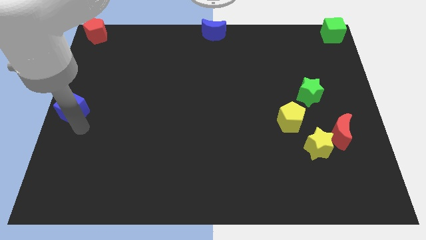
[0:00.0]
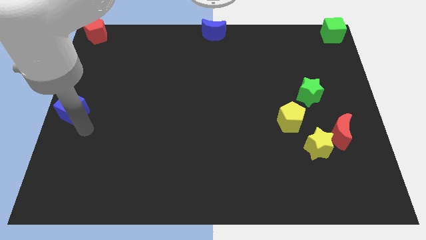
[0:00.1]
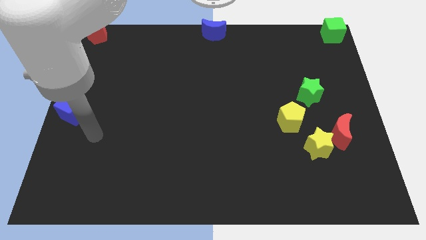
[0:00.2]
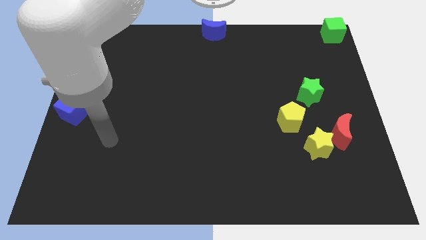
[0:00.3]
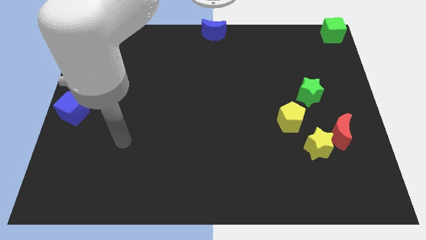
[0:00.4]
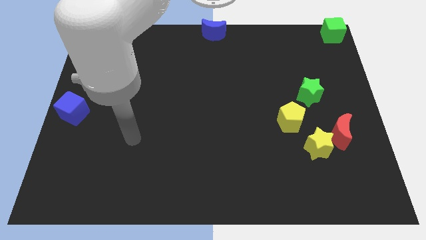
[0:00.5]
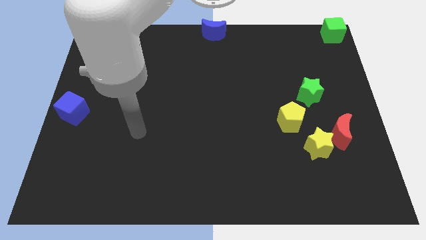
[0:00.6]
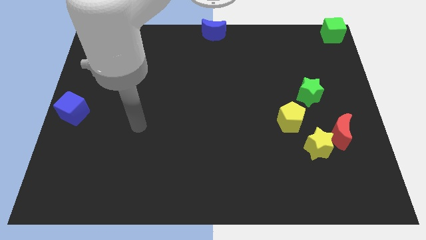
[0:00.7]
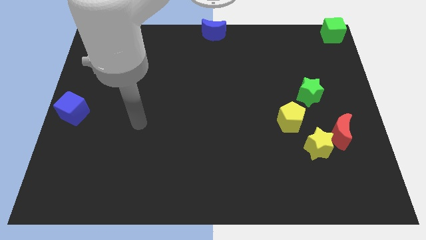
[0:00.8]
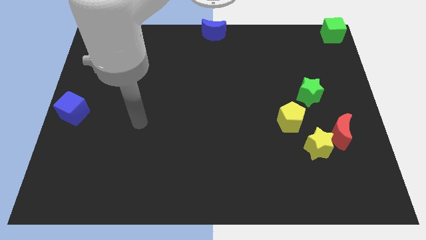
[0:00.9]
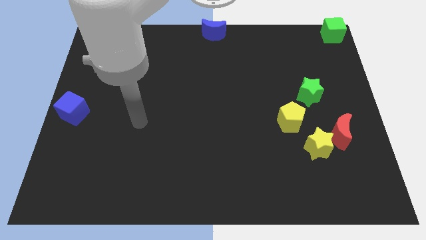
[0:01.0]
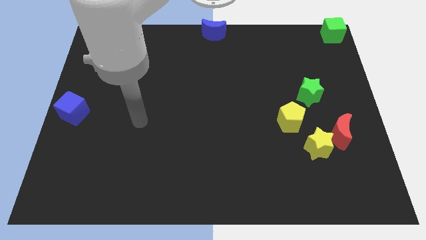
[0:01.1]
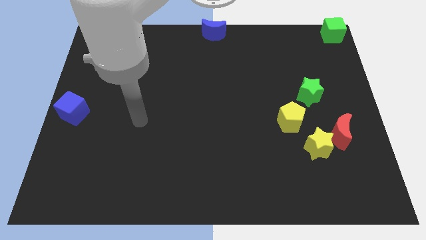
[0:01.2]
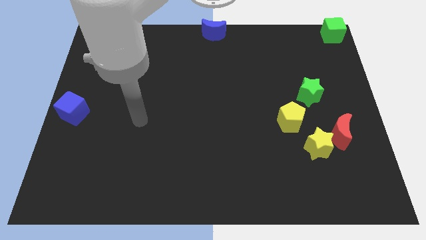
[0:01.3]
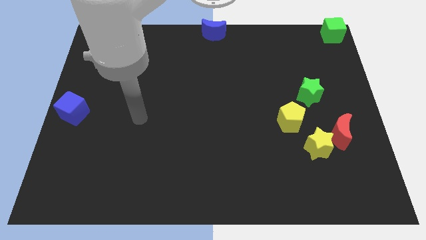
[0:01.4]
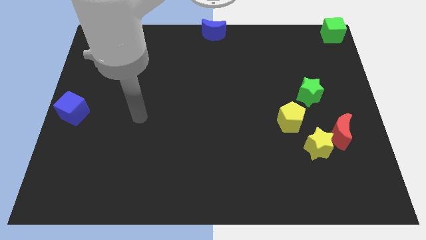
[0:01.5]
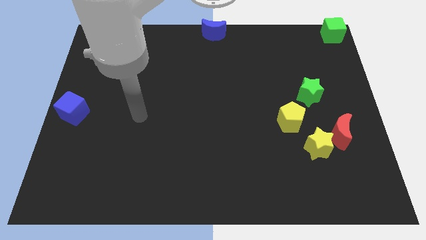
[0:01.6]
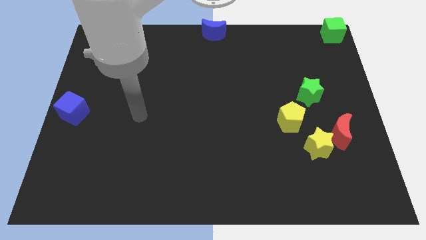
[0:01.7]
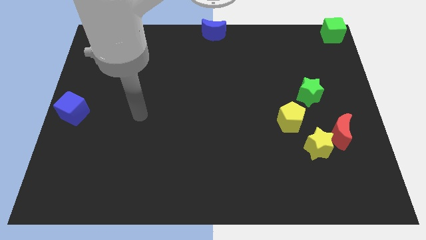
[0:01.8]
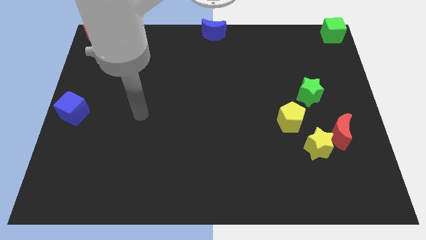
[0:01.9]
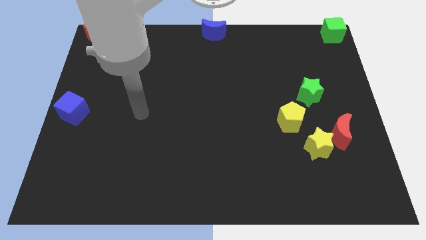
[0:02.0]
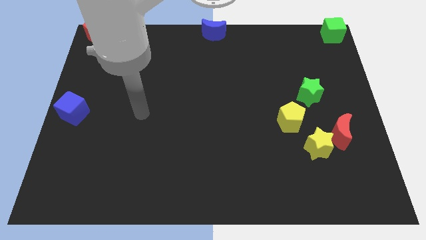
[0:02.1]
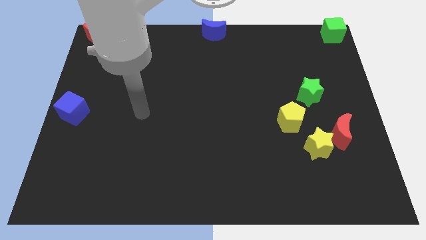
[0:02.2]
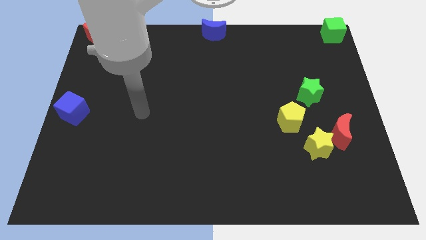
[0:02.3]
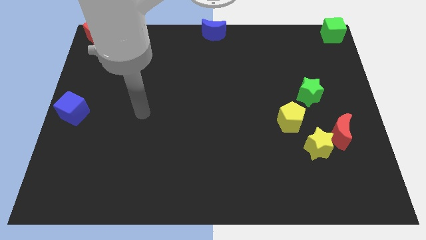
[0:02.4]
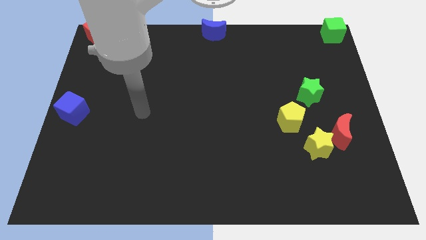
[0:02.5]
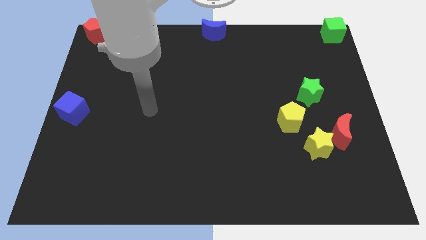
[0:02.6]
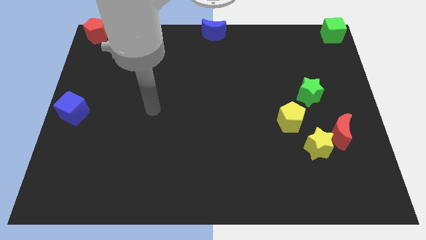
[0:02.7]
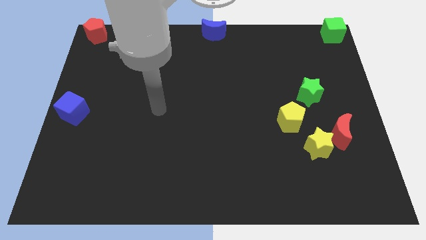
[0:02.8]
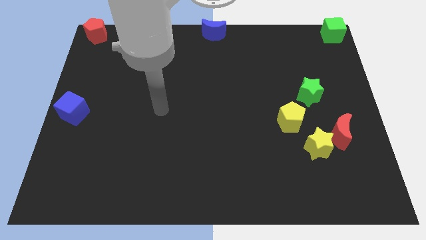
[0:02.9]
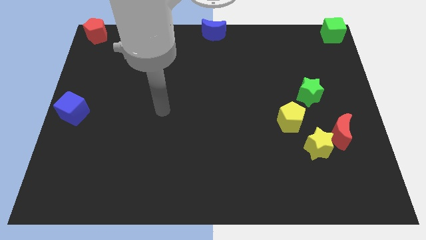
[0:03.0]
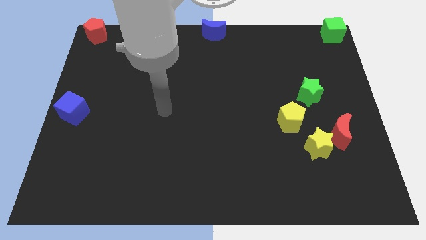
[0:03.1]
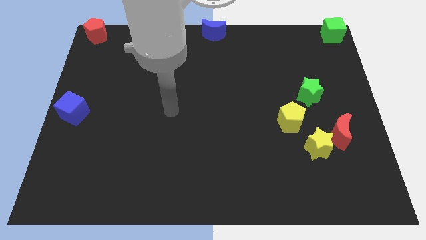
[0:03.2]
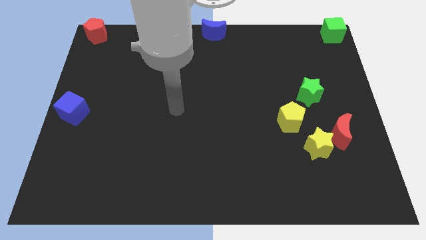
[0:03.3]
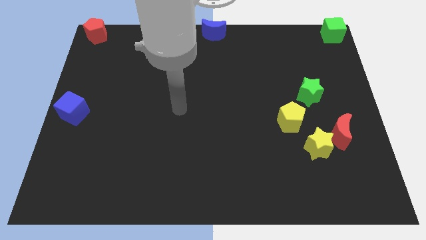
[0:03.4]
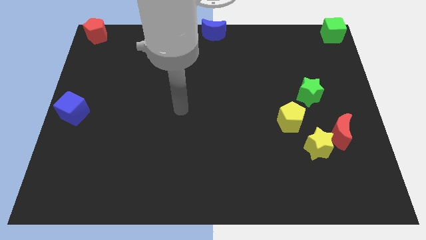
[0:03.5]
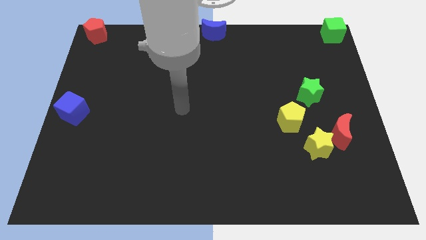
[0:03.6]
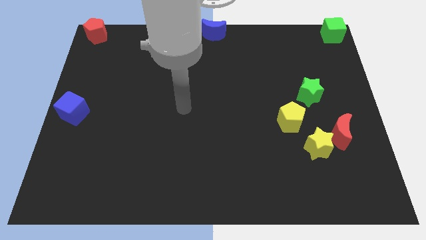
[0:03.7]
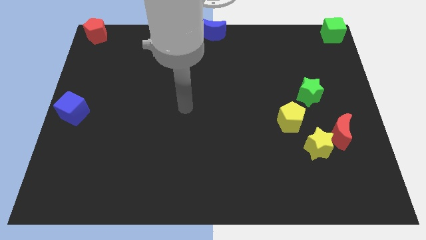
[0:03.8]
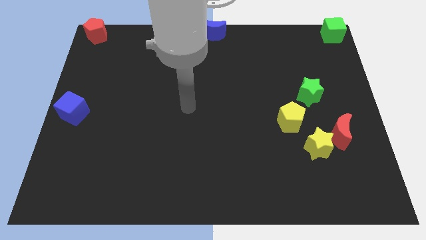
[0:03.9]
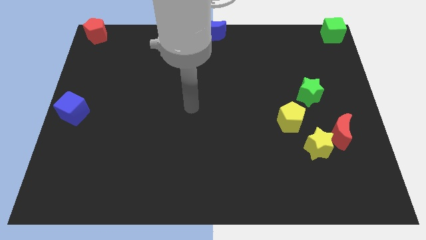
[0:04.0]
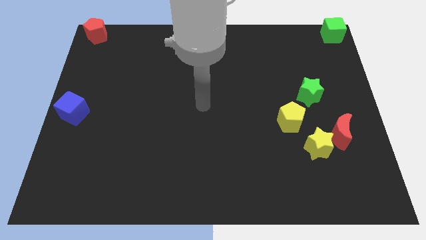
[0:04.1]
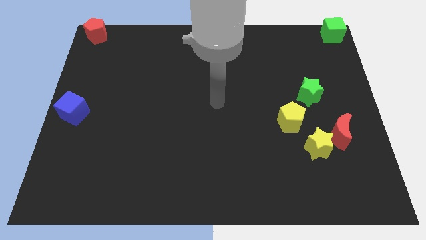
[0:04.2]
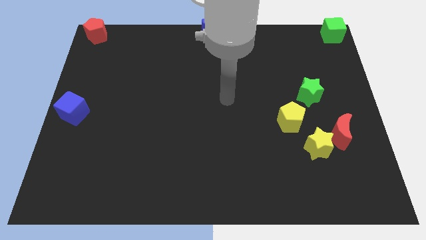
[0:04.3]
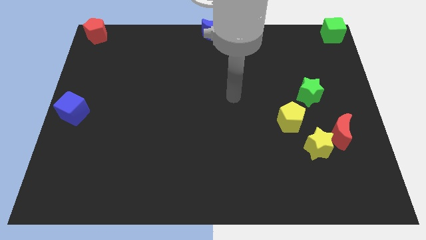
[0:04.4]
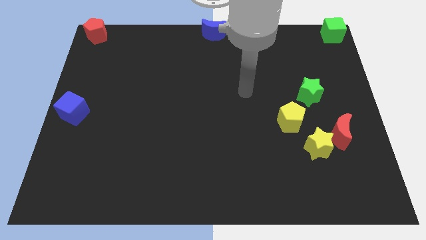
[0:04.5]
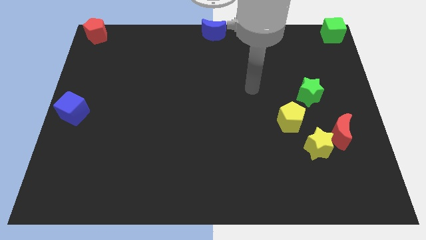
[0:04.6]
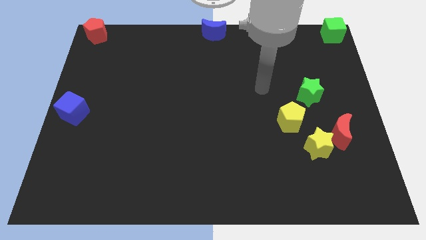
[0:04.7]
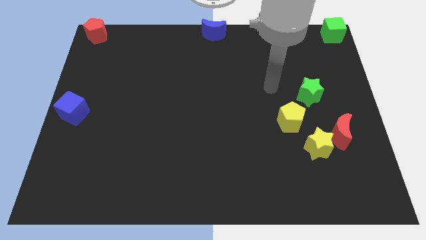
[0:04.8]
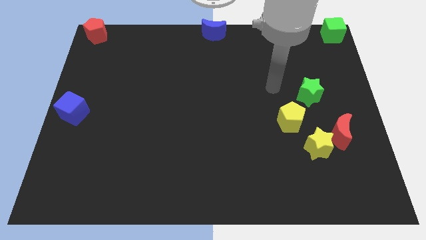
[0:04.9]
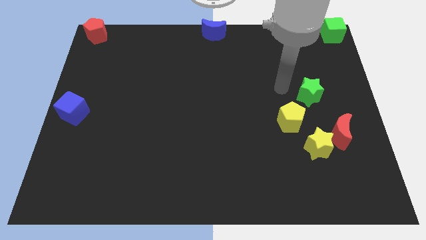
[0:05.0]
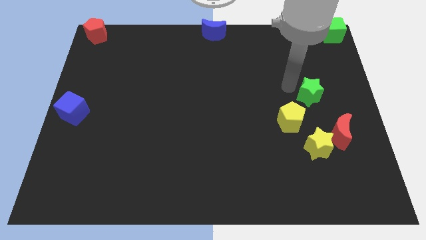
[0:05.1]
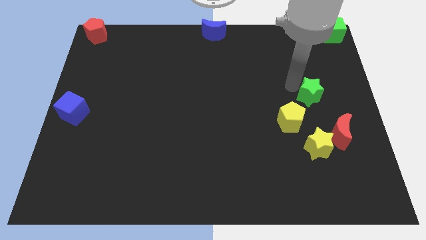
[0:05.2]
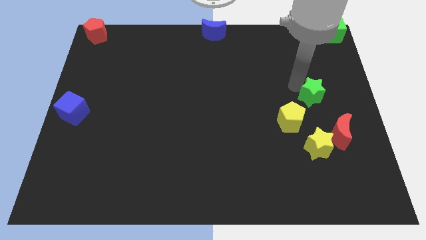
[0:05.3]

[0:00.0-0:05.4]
move your arm towards the green star block

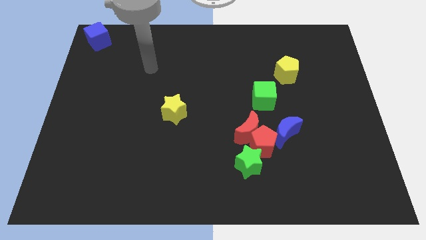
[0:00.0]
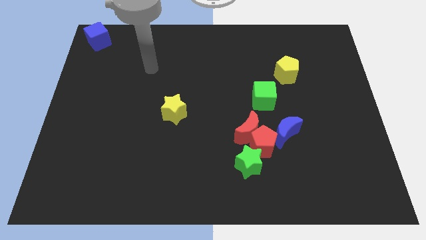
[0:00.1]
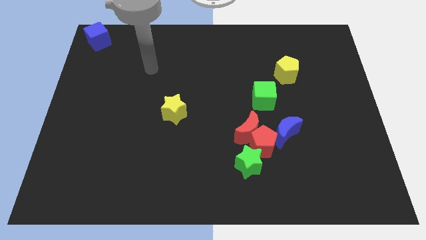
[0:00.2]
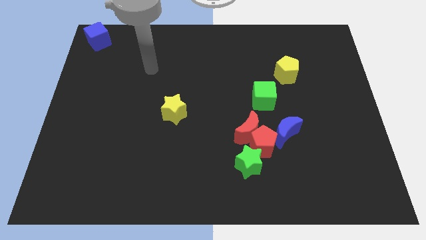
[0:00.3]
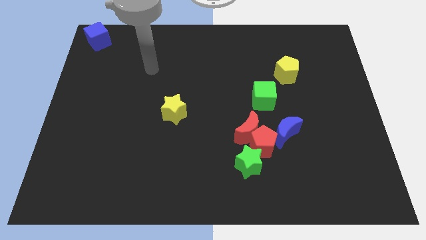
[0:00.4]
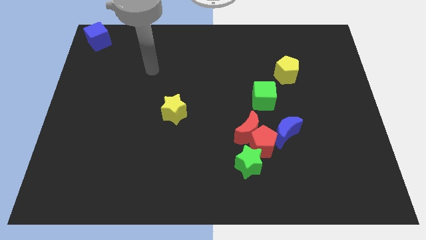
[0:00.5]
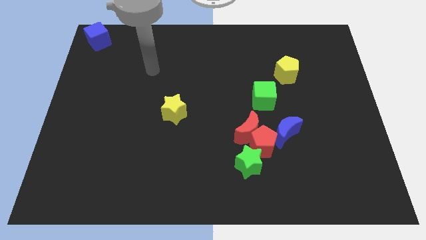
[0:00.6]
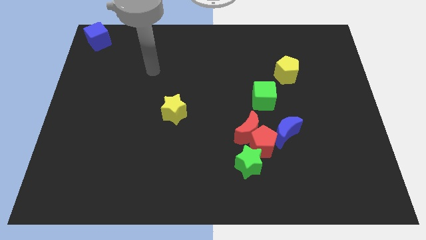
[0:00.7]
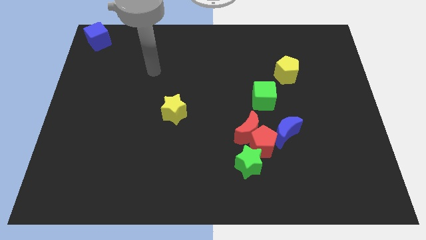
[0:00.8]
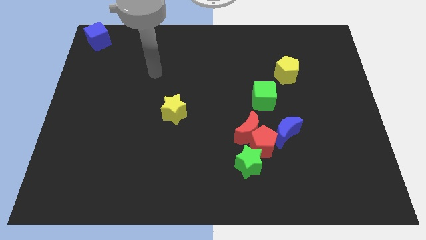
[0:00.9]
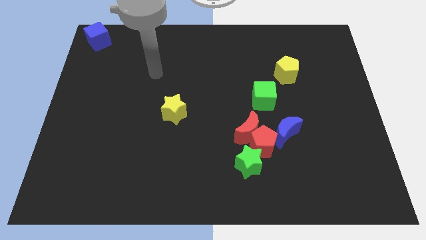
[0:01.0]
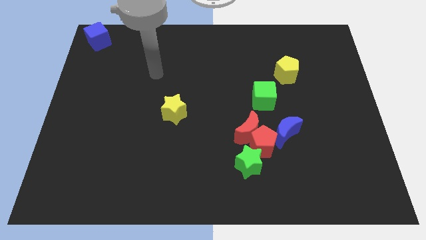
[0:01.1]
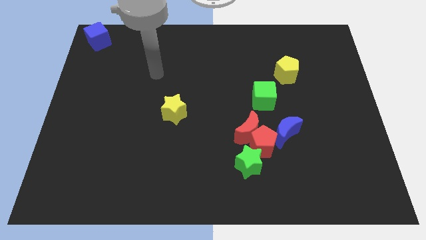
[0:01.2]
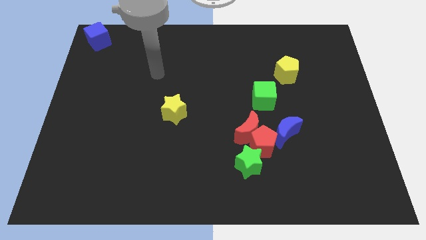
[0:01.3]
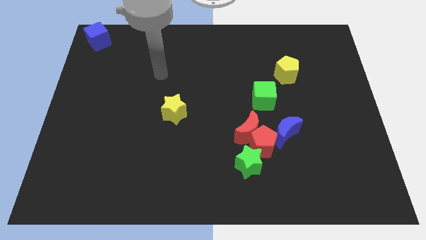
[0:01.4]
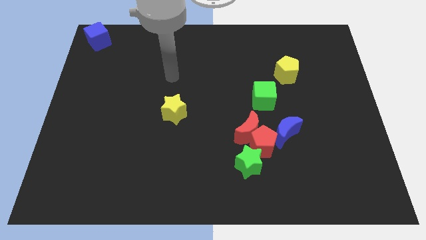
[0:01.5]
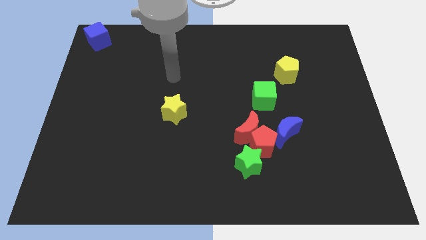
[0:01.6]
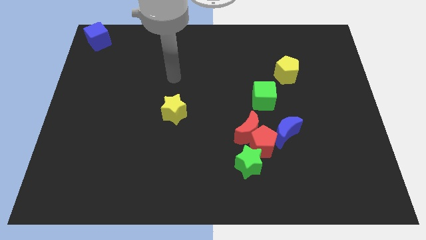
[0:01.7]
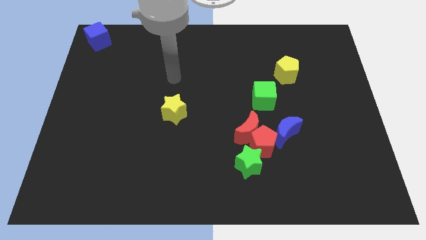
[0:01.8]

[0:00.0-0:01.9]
place your arm above the yellow star

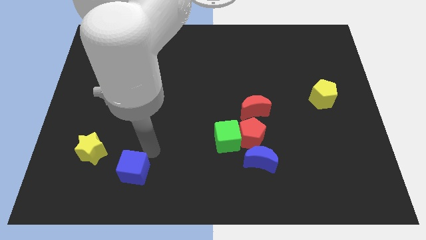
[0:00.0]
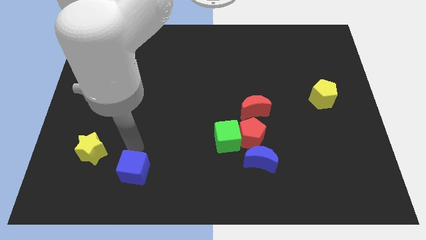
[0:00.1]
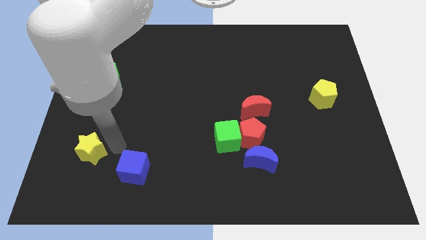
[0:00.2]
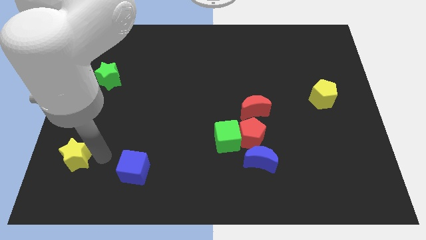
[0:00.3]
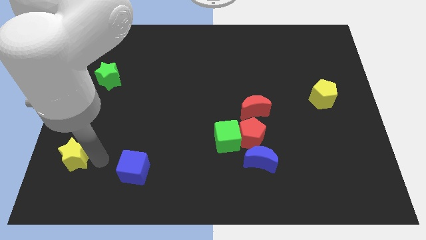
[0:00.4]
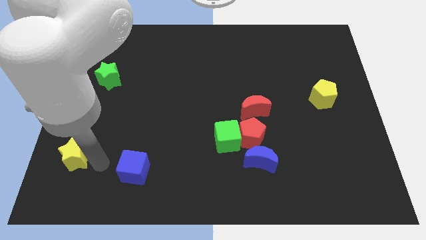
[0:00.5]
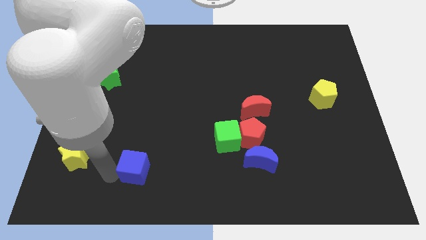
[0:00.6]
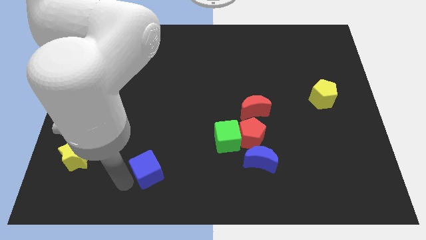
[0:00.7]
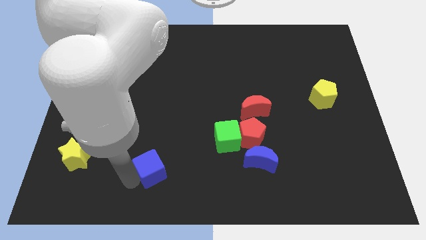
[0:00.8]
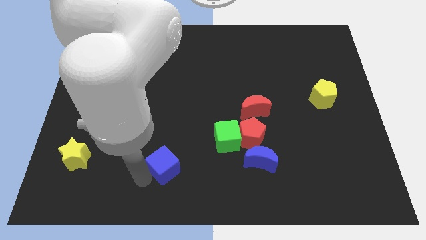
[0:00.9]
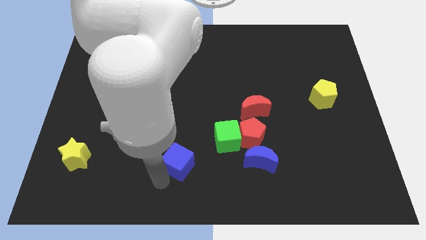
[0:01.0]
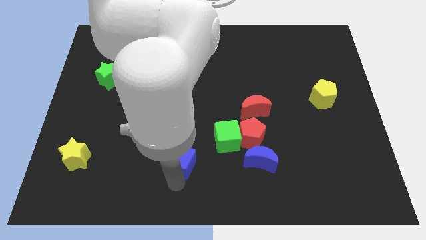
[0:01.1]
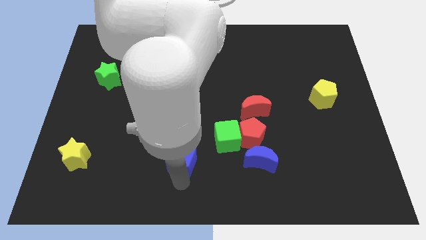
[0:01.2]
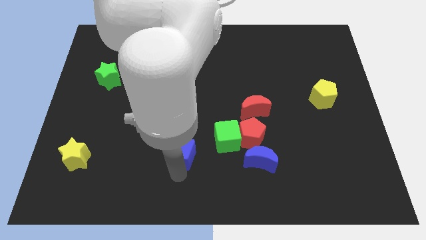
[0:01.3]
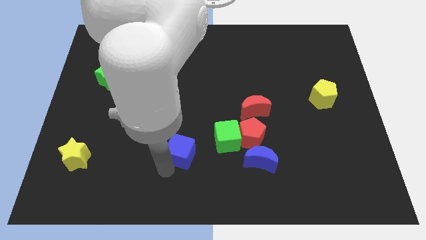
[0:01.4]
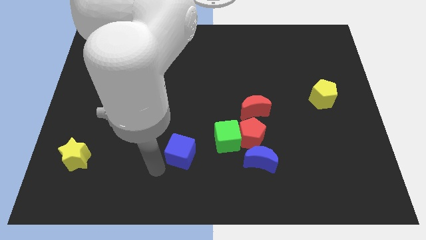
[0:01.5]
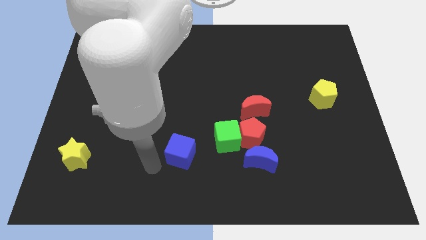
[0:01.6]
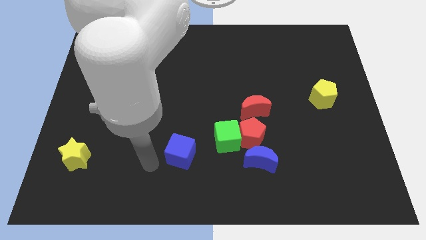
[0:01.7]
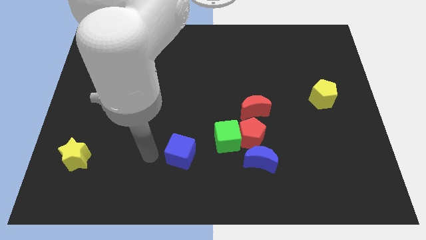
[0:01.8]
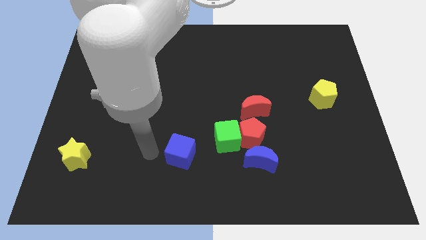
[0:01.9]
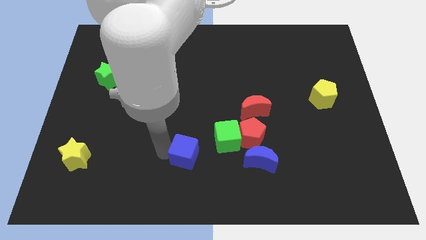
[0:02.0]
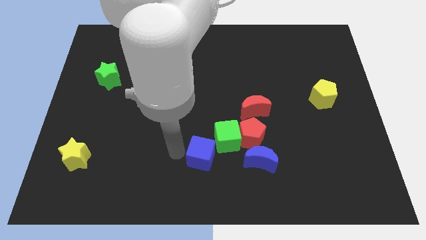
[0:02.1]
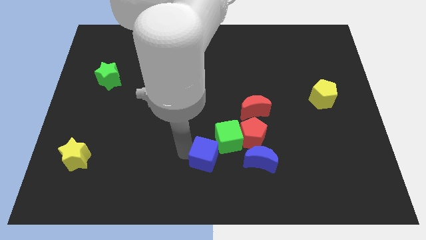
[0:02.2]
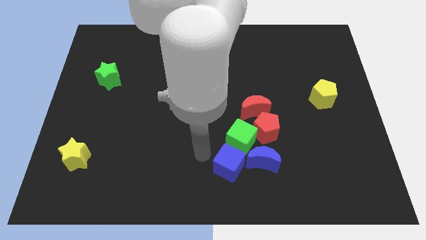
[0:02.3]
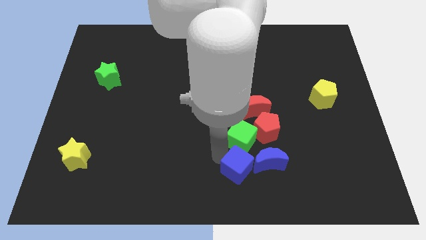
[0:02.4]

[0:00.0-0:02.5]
put blue cube below green cube
